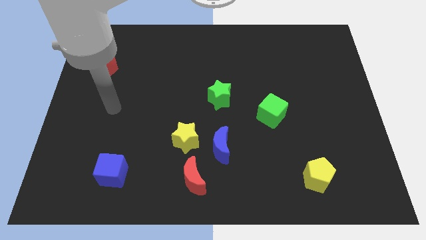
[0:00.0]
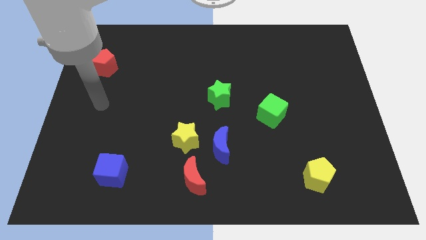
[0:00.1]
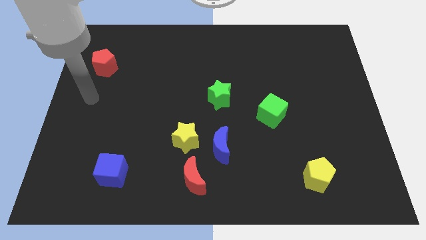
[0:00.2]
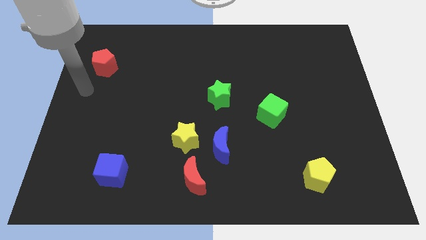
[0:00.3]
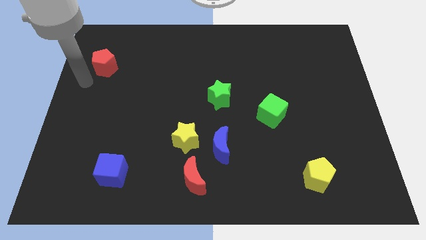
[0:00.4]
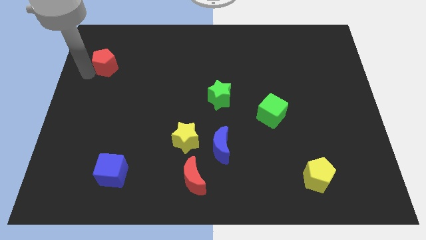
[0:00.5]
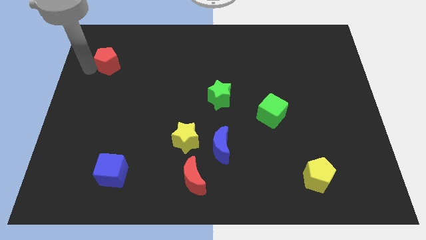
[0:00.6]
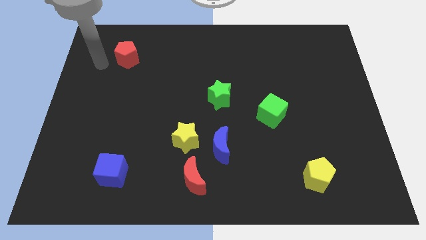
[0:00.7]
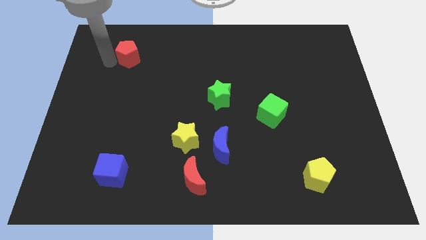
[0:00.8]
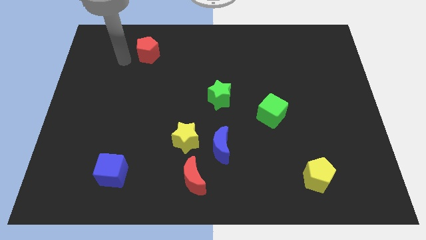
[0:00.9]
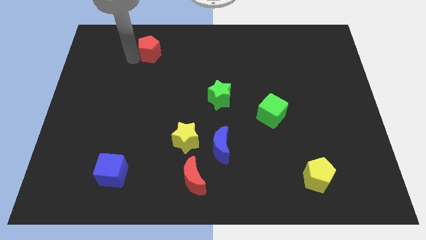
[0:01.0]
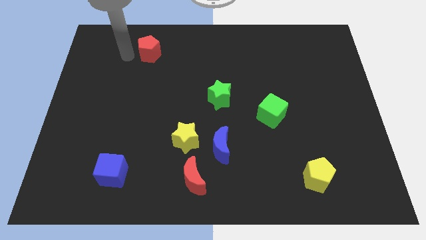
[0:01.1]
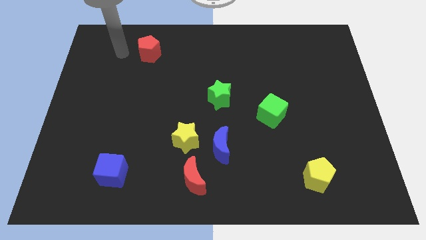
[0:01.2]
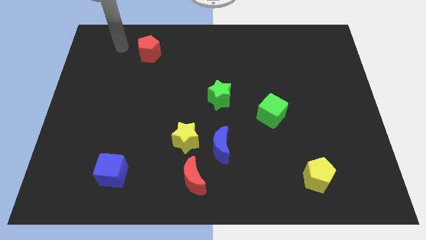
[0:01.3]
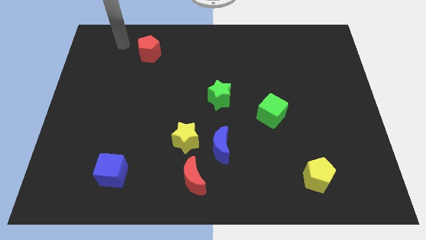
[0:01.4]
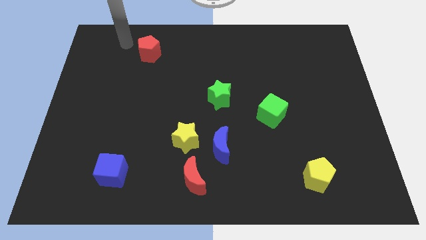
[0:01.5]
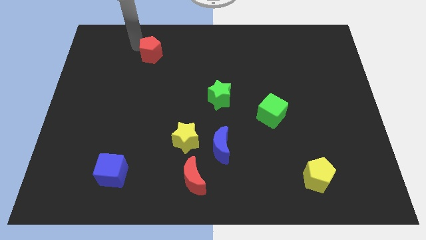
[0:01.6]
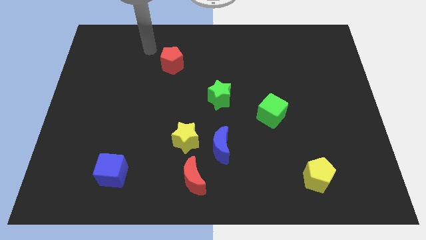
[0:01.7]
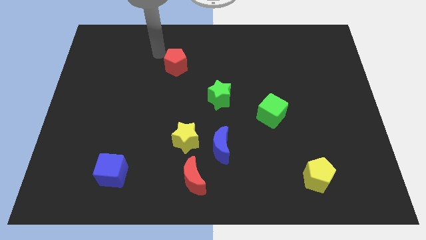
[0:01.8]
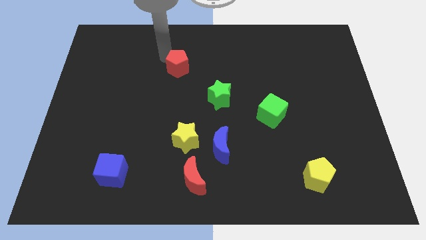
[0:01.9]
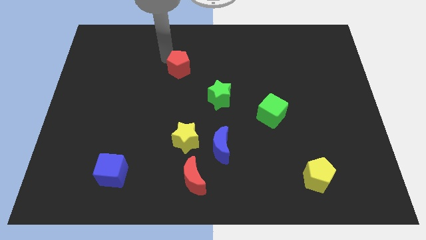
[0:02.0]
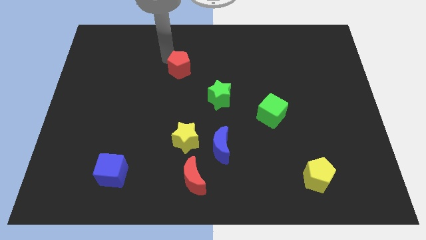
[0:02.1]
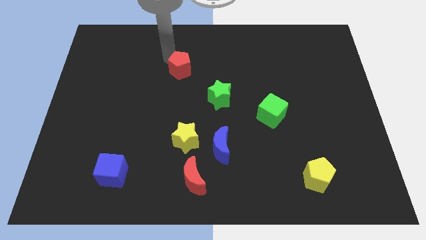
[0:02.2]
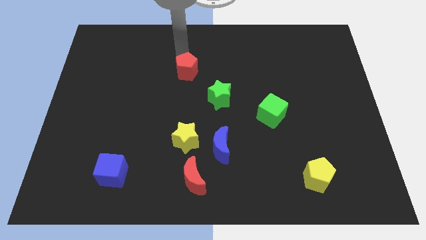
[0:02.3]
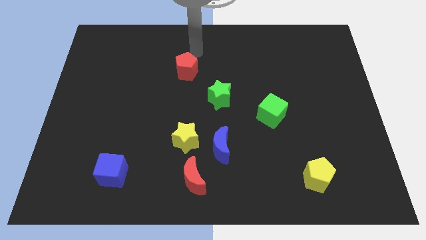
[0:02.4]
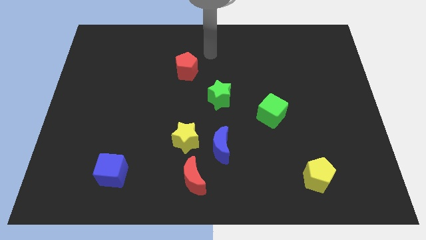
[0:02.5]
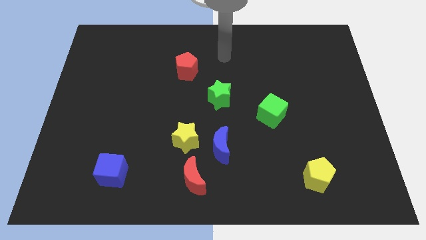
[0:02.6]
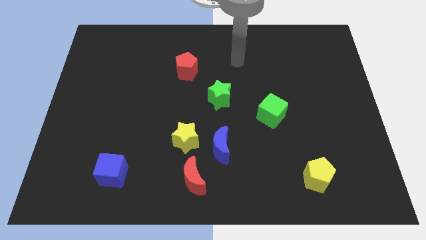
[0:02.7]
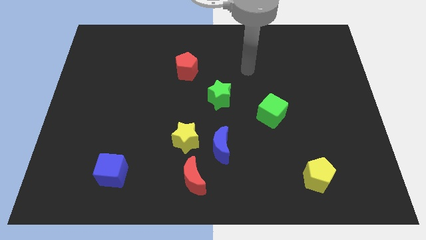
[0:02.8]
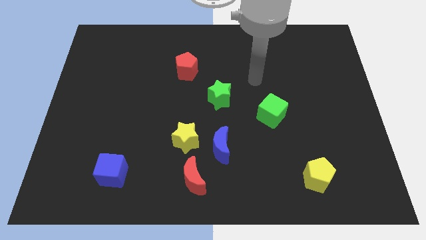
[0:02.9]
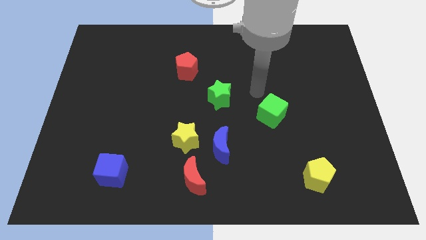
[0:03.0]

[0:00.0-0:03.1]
move the red pentagon diagonal left of green star

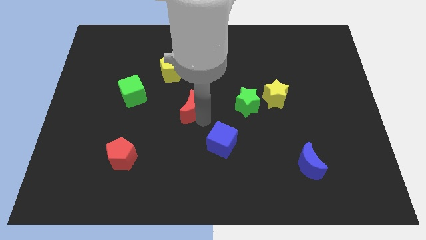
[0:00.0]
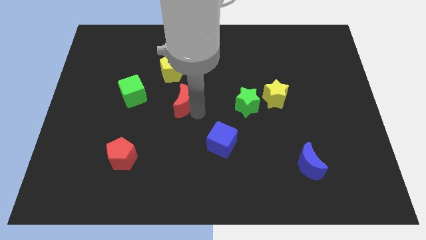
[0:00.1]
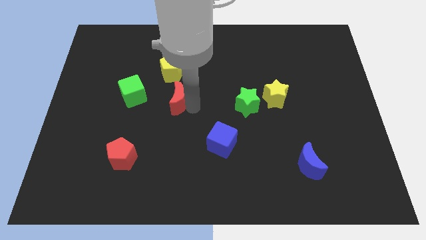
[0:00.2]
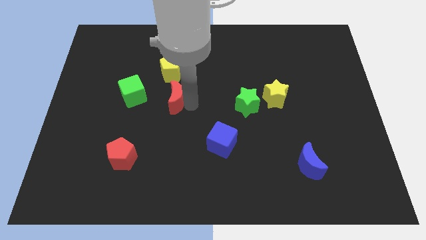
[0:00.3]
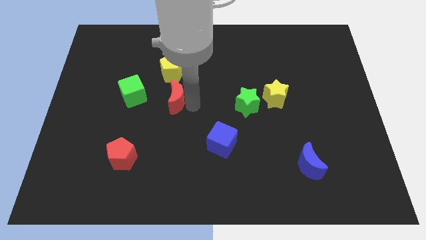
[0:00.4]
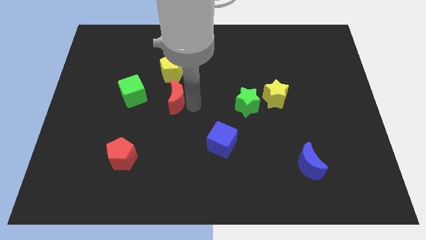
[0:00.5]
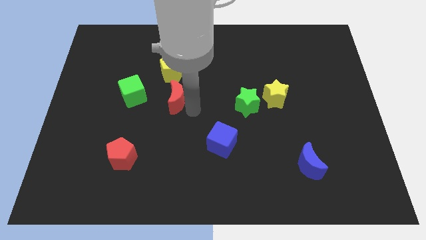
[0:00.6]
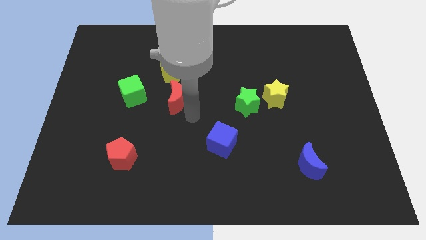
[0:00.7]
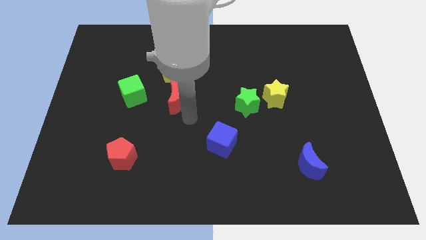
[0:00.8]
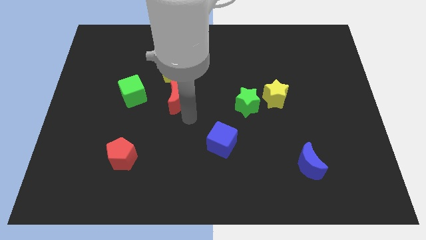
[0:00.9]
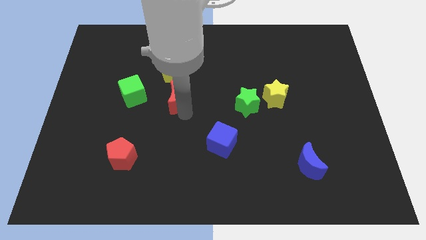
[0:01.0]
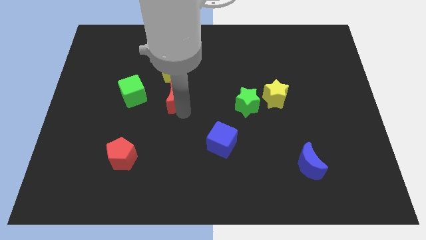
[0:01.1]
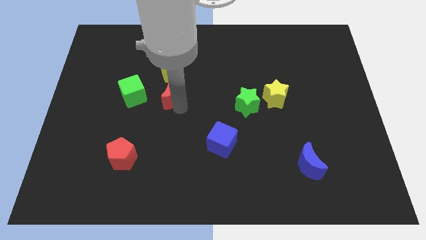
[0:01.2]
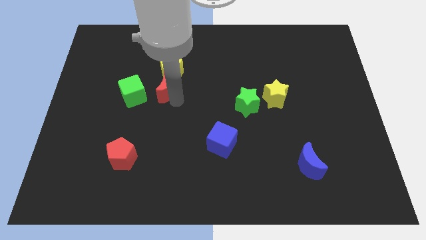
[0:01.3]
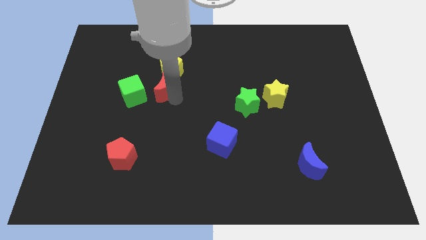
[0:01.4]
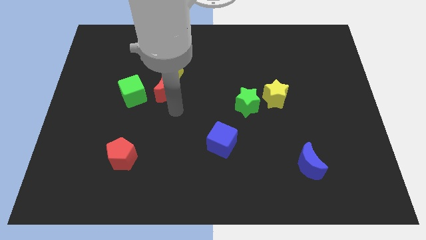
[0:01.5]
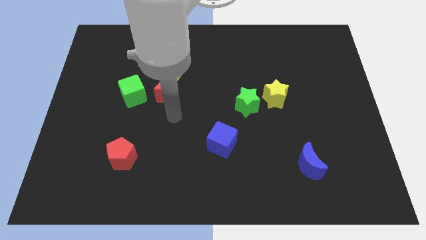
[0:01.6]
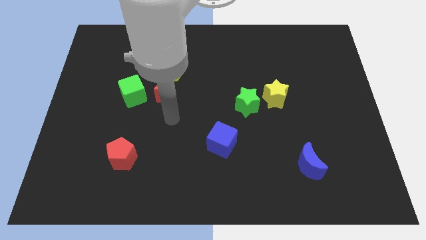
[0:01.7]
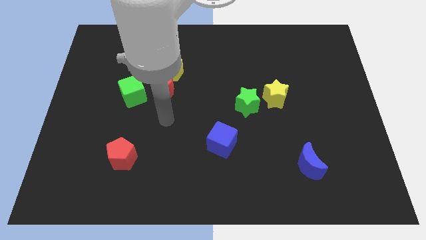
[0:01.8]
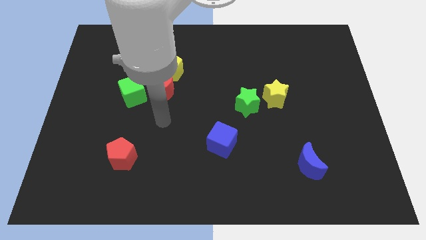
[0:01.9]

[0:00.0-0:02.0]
place the red crescent to the bottom of the yellow pentagon

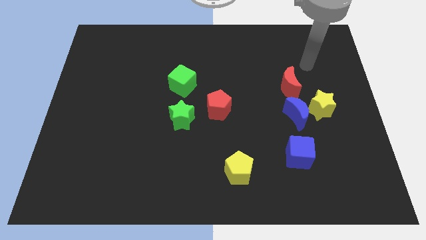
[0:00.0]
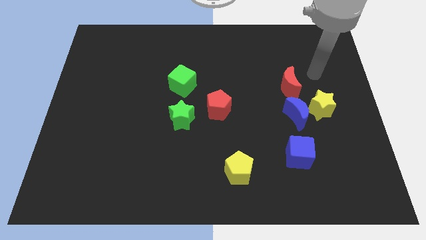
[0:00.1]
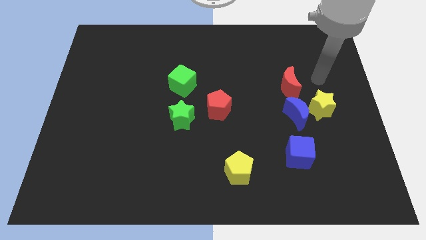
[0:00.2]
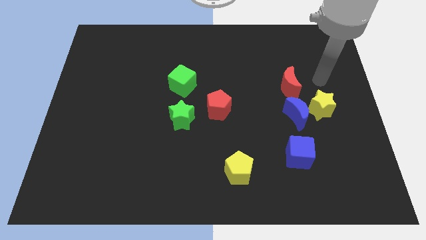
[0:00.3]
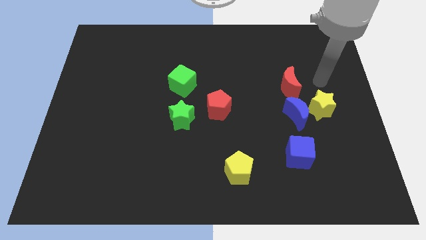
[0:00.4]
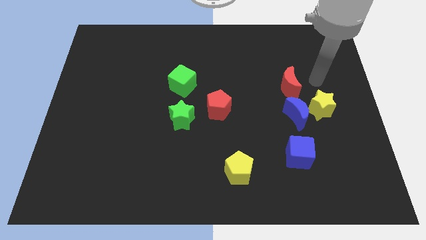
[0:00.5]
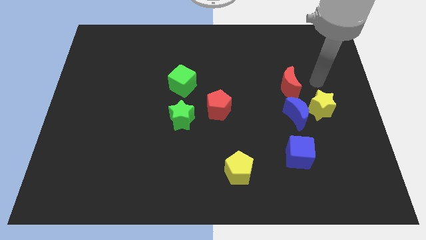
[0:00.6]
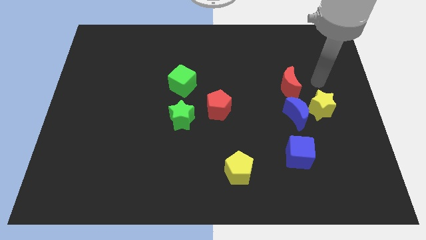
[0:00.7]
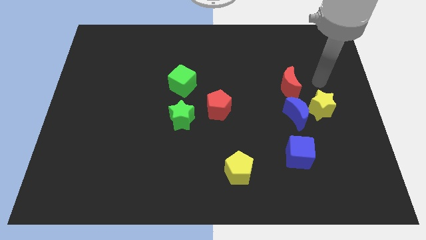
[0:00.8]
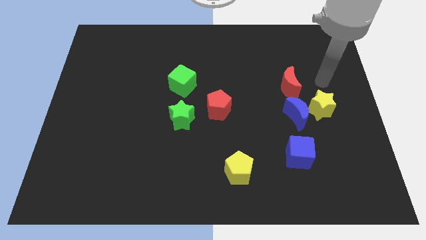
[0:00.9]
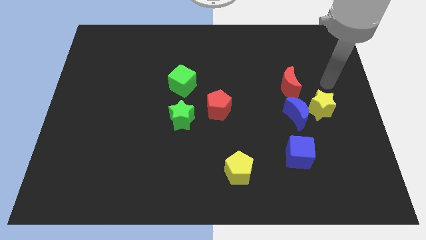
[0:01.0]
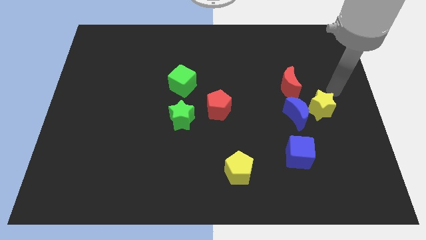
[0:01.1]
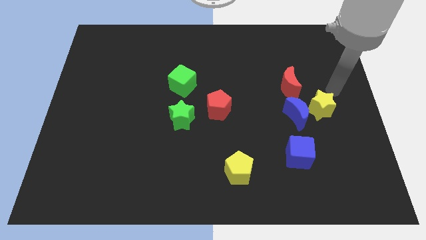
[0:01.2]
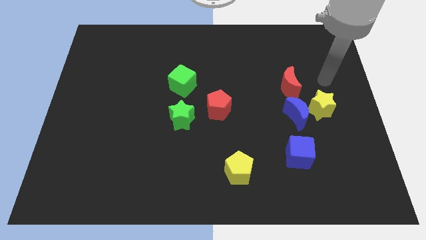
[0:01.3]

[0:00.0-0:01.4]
point your arm above yellow star

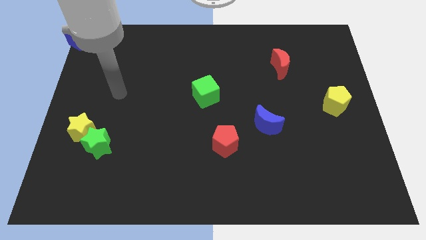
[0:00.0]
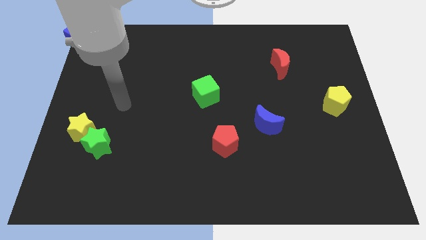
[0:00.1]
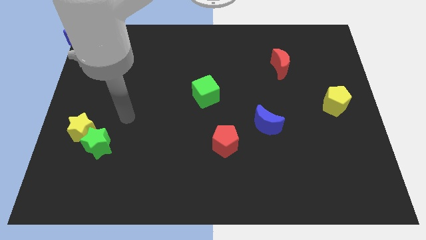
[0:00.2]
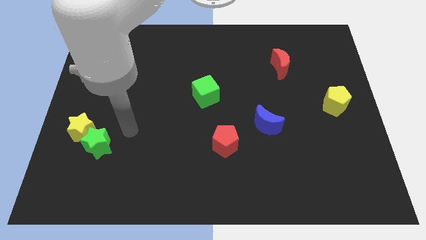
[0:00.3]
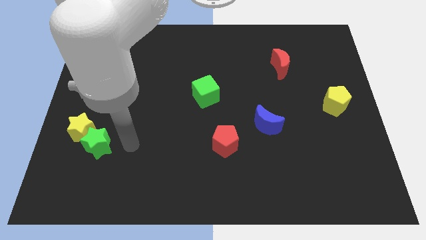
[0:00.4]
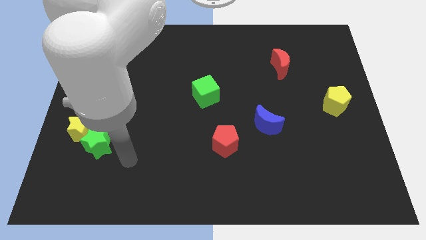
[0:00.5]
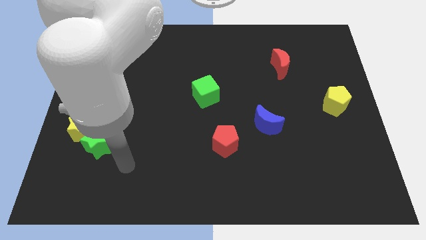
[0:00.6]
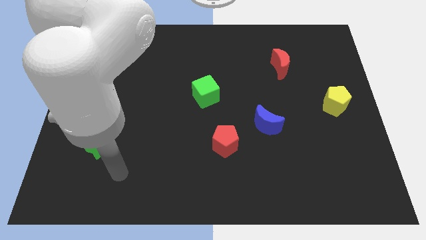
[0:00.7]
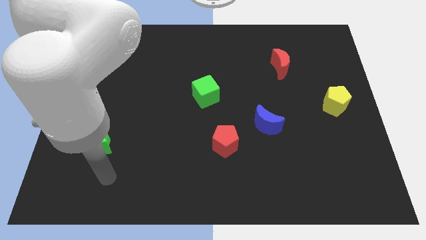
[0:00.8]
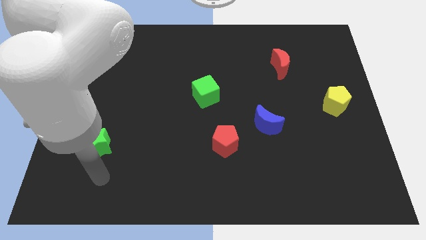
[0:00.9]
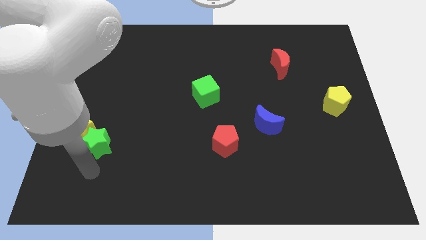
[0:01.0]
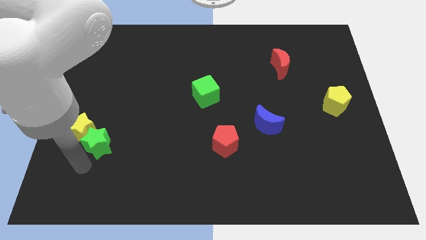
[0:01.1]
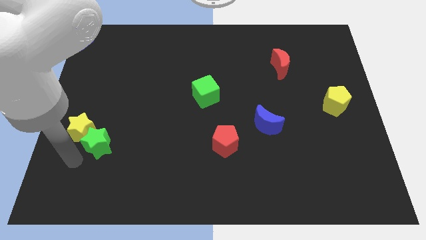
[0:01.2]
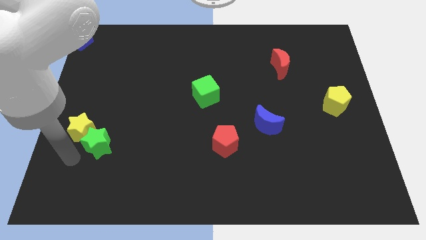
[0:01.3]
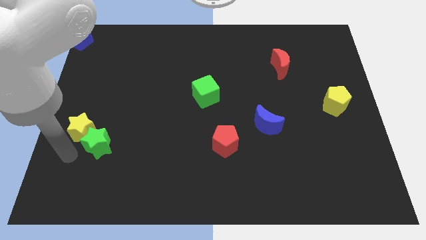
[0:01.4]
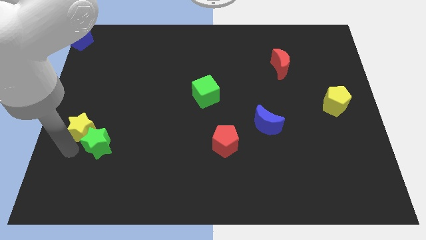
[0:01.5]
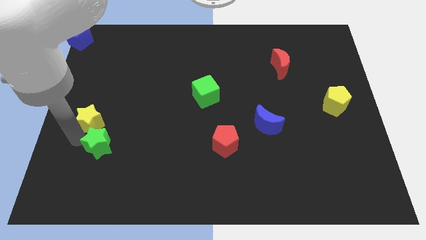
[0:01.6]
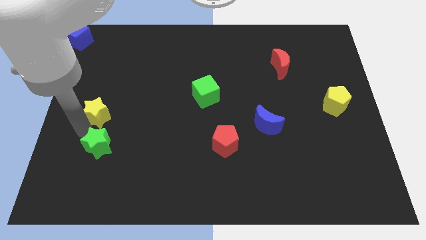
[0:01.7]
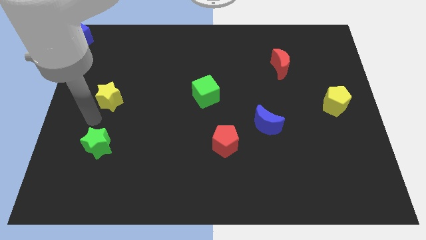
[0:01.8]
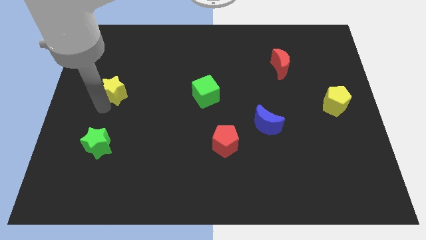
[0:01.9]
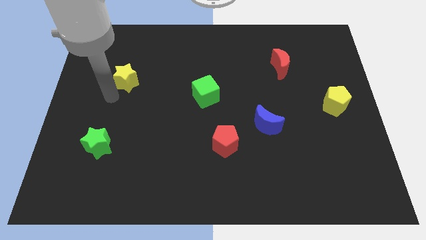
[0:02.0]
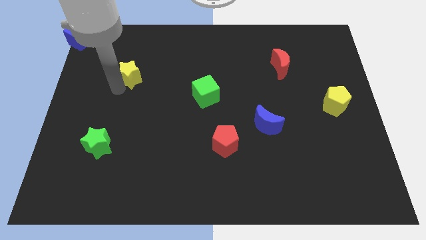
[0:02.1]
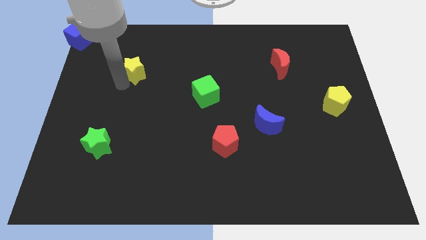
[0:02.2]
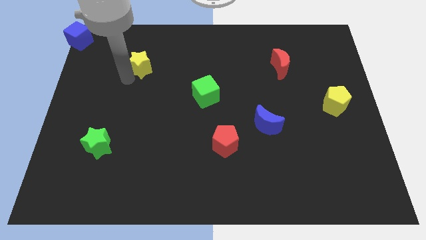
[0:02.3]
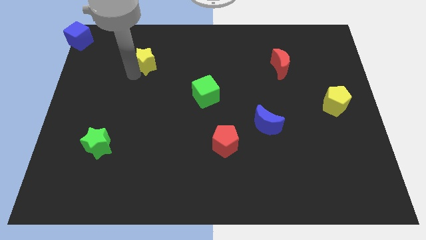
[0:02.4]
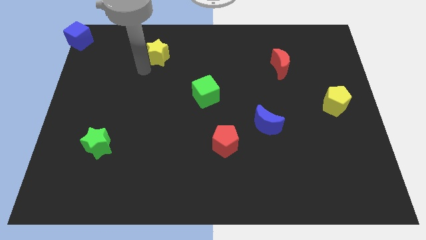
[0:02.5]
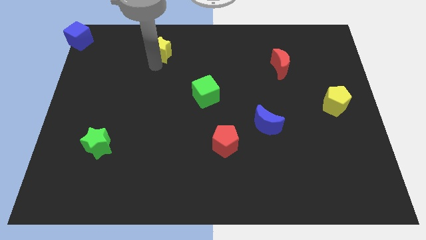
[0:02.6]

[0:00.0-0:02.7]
separate the yellow star from the green star
